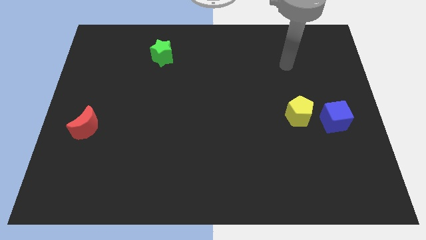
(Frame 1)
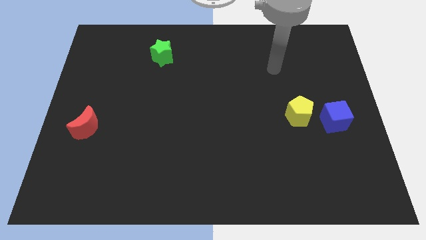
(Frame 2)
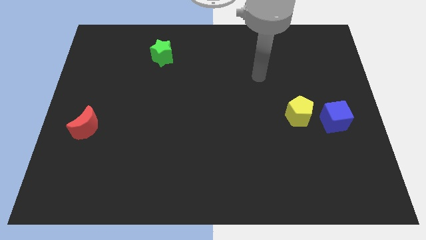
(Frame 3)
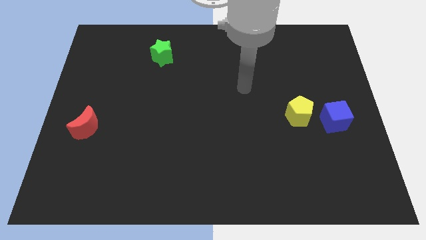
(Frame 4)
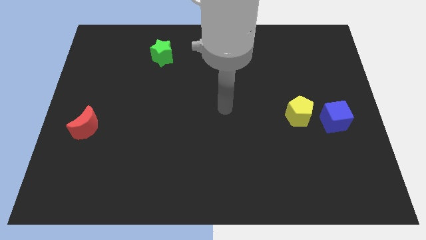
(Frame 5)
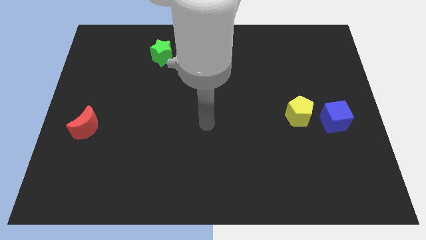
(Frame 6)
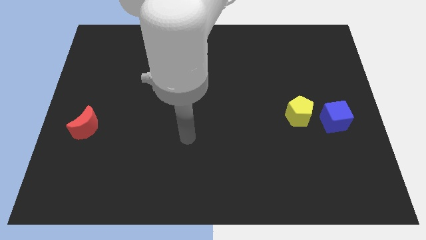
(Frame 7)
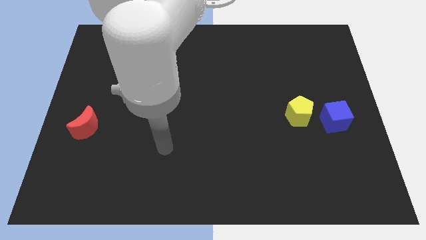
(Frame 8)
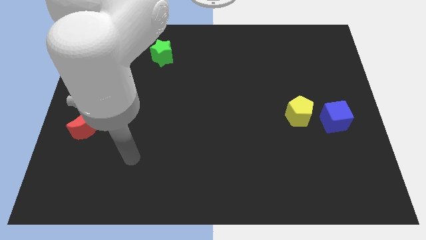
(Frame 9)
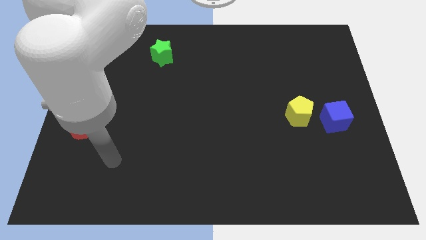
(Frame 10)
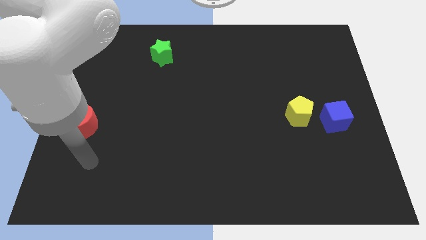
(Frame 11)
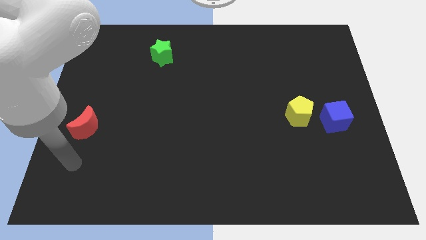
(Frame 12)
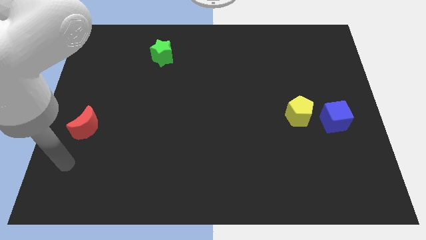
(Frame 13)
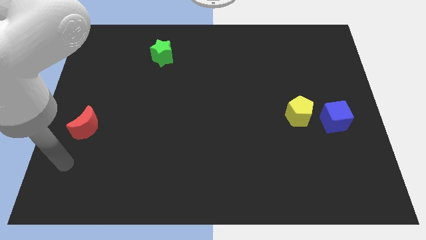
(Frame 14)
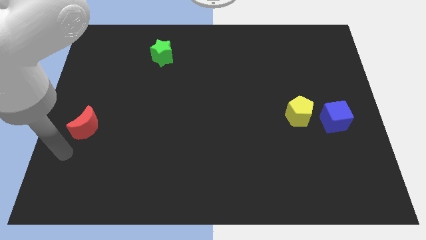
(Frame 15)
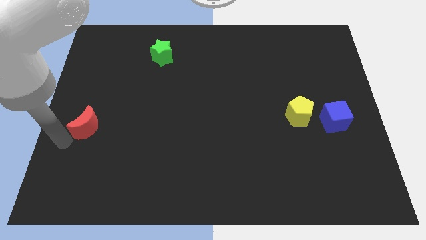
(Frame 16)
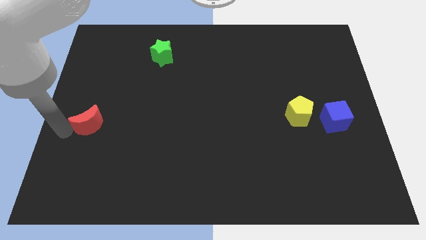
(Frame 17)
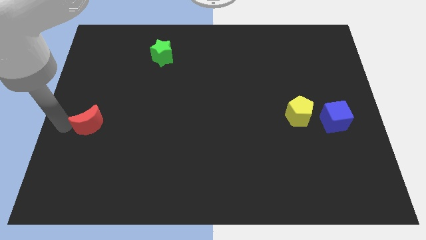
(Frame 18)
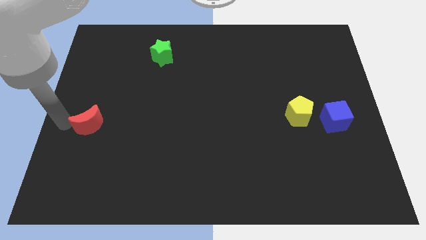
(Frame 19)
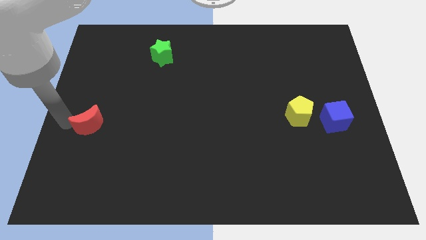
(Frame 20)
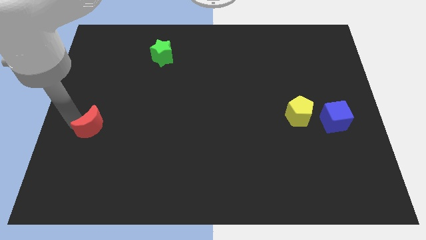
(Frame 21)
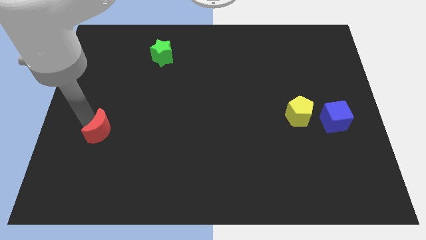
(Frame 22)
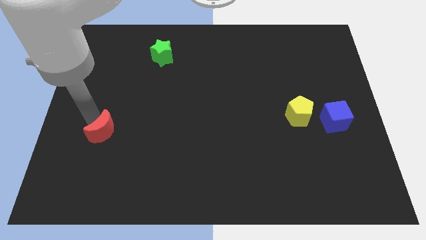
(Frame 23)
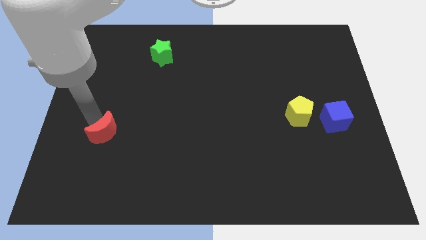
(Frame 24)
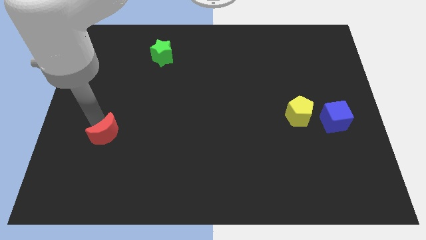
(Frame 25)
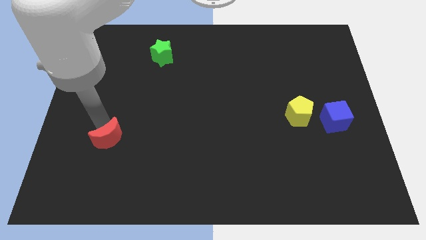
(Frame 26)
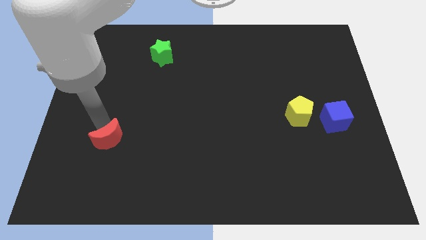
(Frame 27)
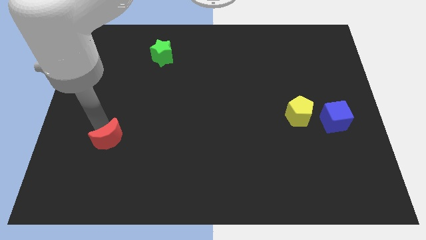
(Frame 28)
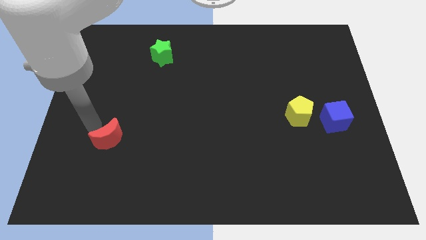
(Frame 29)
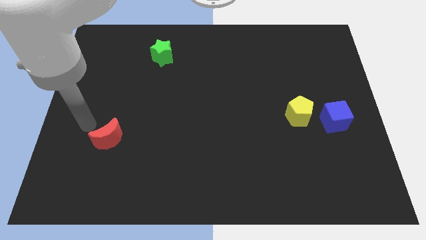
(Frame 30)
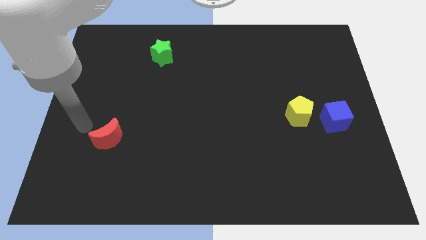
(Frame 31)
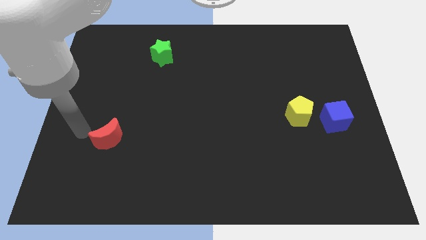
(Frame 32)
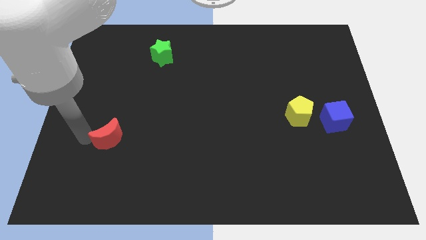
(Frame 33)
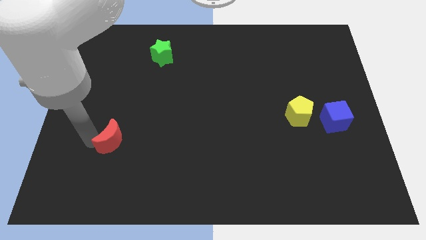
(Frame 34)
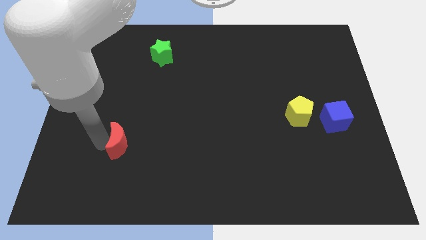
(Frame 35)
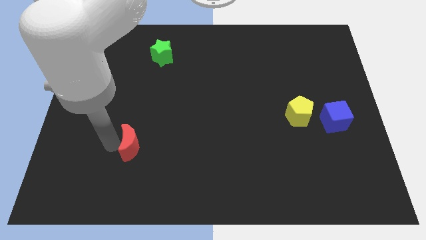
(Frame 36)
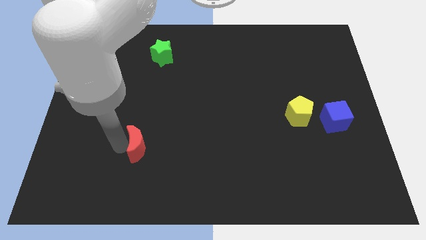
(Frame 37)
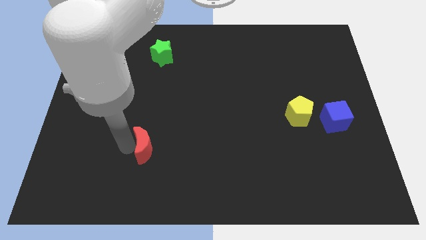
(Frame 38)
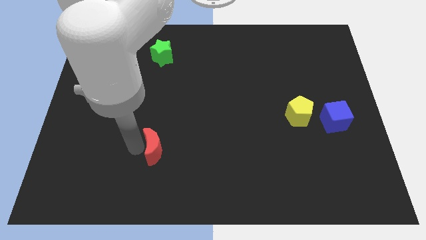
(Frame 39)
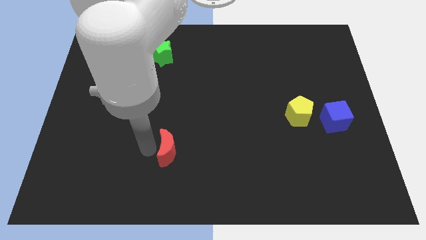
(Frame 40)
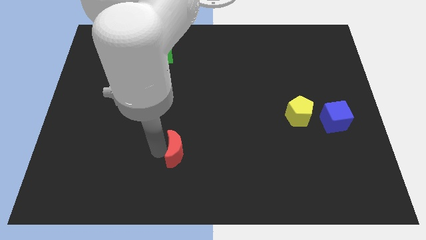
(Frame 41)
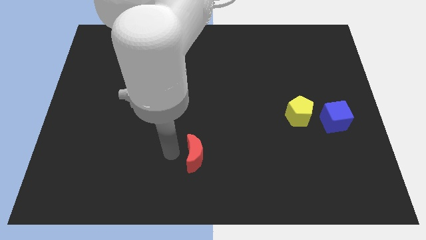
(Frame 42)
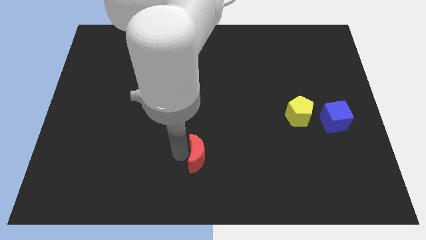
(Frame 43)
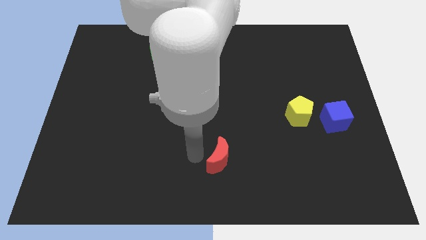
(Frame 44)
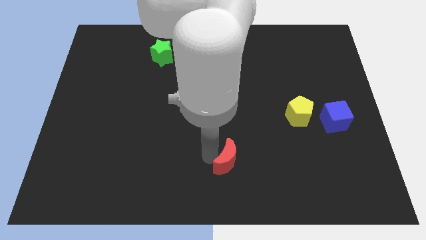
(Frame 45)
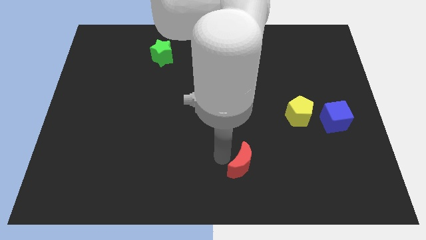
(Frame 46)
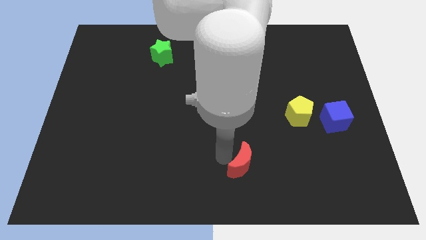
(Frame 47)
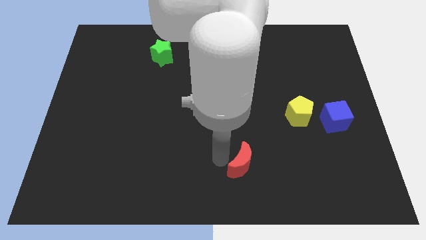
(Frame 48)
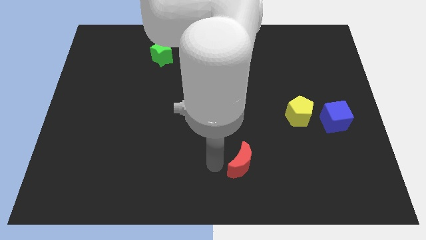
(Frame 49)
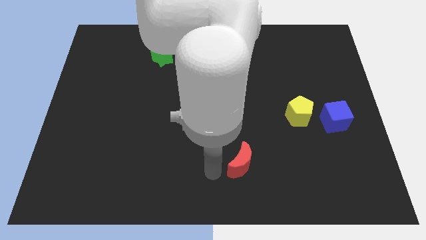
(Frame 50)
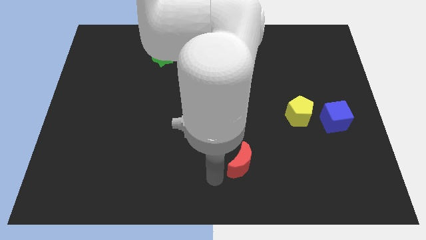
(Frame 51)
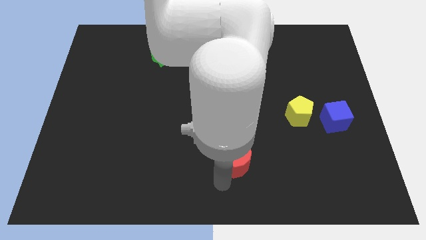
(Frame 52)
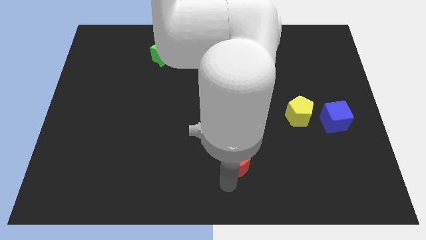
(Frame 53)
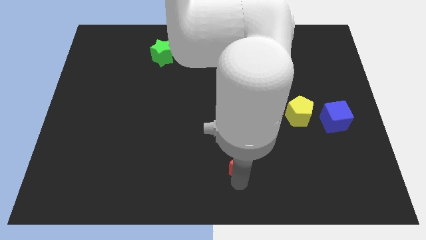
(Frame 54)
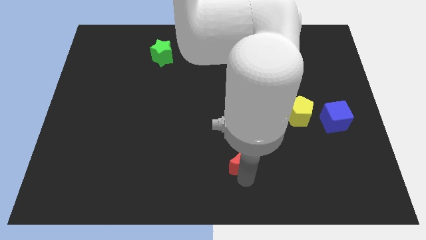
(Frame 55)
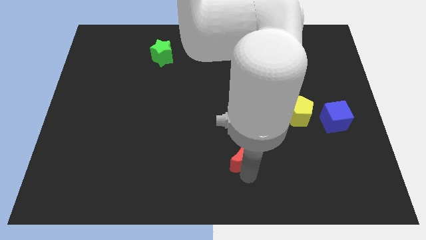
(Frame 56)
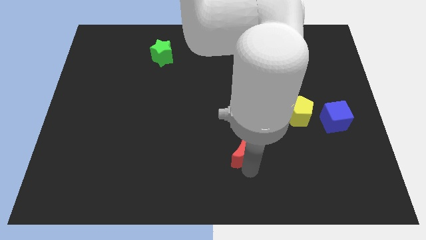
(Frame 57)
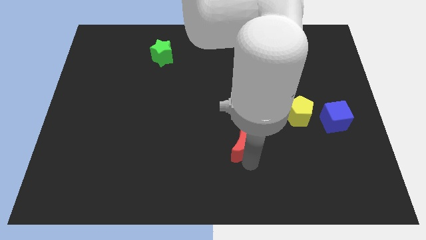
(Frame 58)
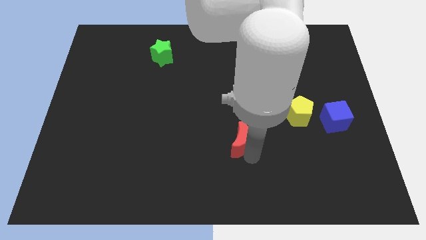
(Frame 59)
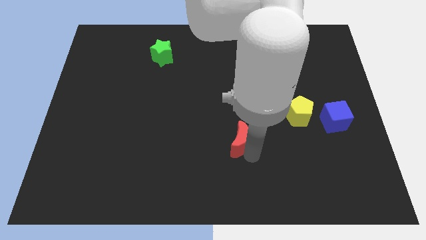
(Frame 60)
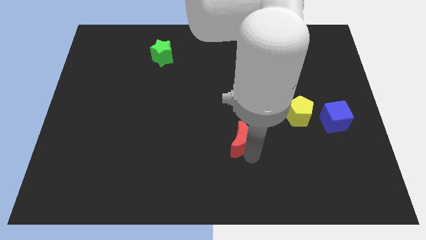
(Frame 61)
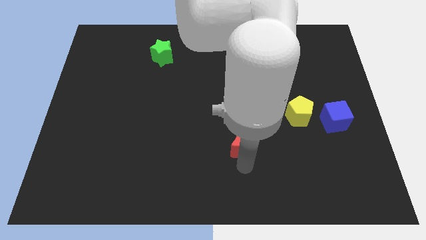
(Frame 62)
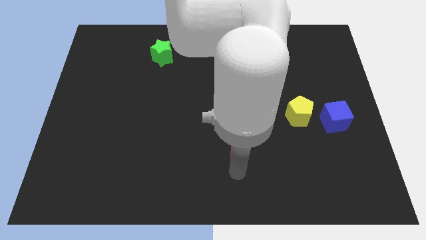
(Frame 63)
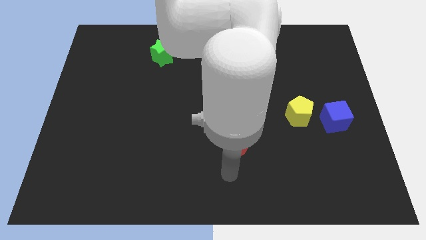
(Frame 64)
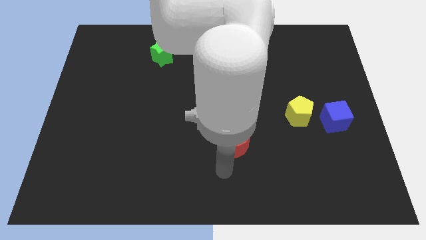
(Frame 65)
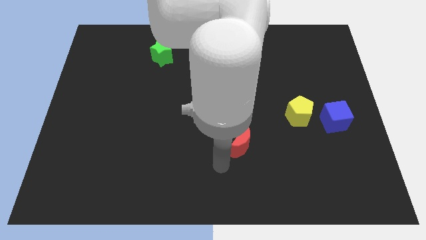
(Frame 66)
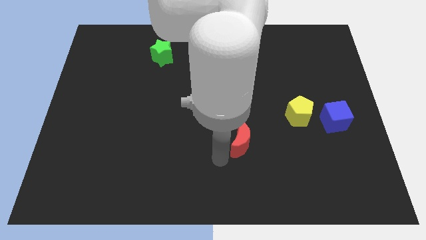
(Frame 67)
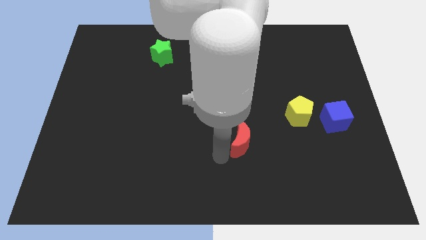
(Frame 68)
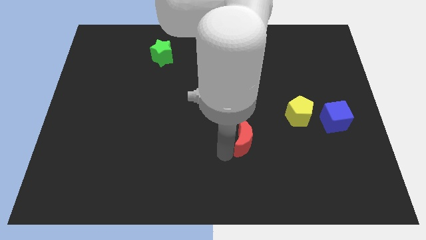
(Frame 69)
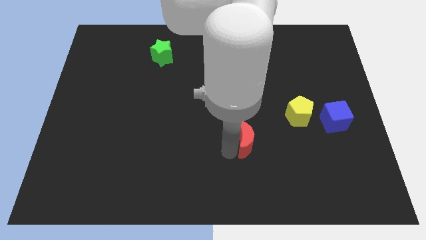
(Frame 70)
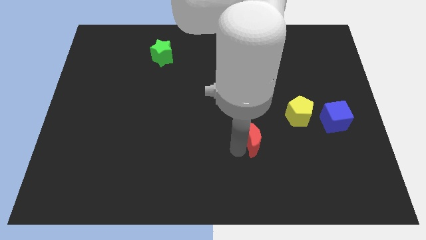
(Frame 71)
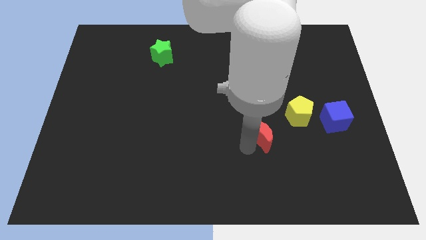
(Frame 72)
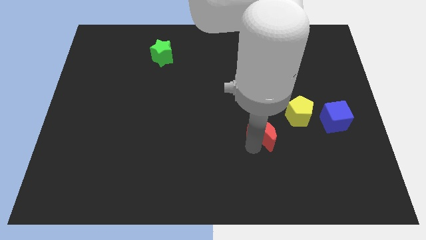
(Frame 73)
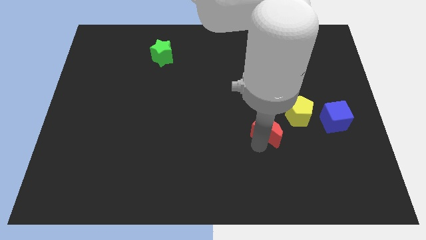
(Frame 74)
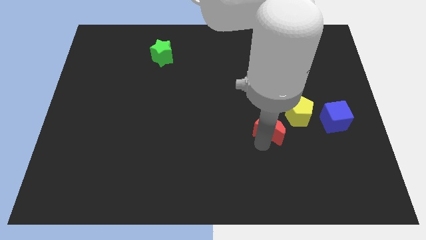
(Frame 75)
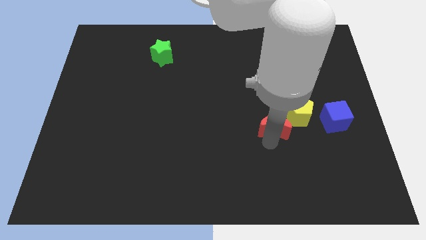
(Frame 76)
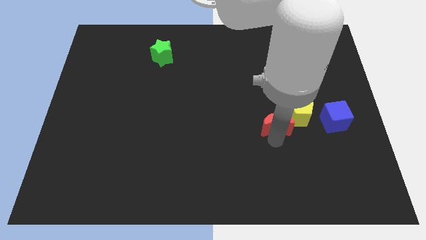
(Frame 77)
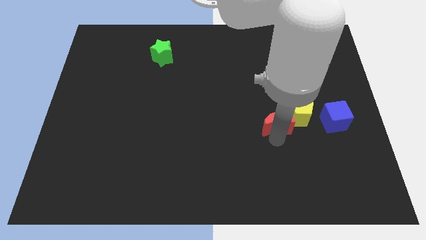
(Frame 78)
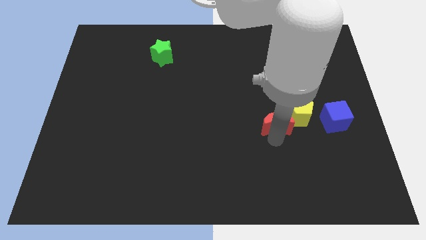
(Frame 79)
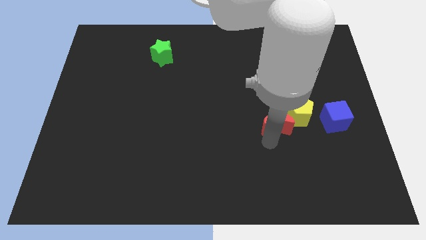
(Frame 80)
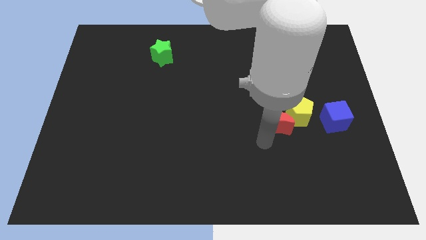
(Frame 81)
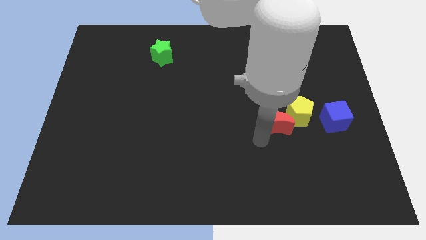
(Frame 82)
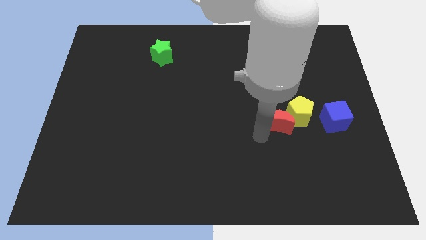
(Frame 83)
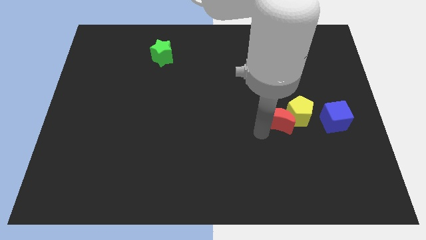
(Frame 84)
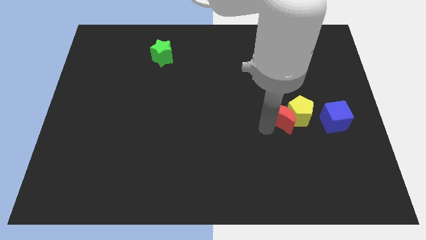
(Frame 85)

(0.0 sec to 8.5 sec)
push the moon next to the yellow pentagon
